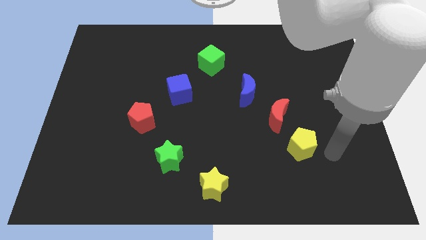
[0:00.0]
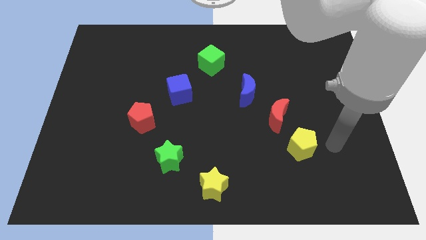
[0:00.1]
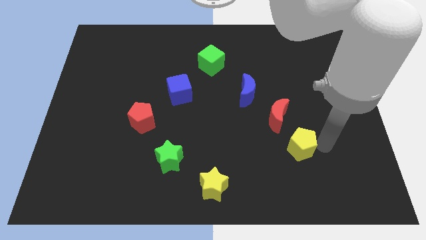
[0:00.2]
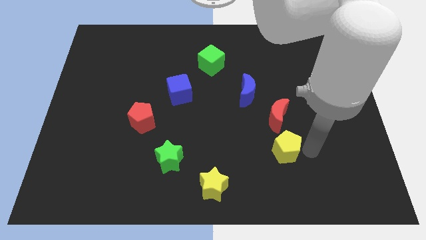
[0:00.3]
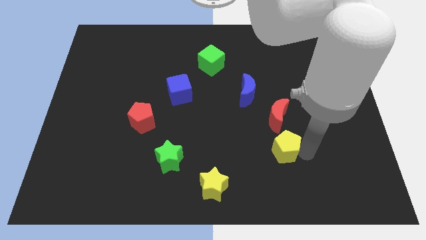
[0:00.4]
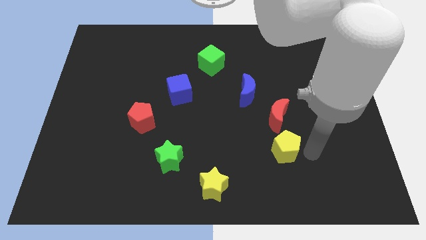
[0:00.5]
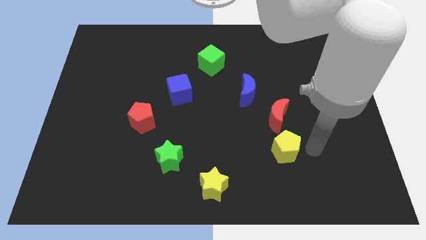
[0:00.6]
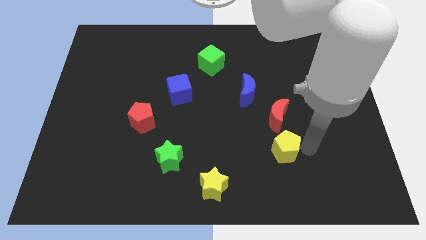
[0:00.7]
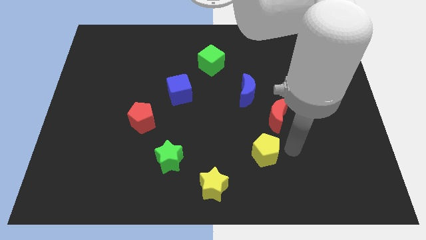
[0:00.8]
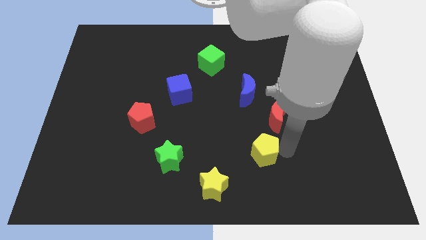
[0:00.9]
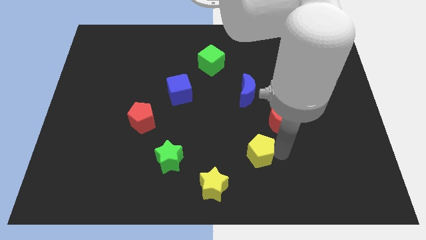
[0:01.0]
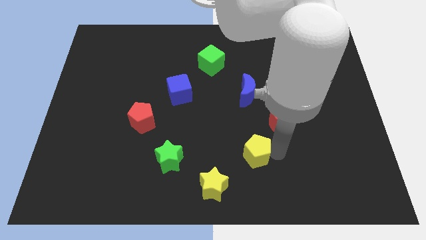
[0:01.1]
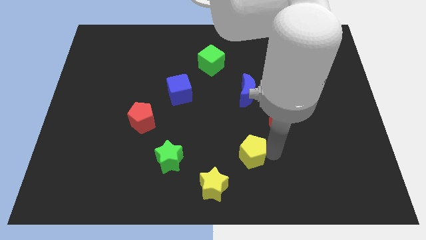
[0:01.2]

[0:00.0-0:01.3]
push the yellow pentagon slightly to the left

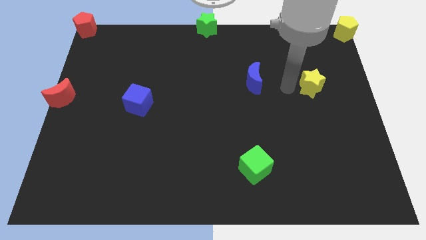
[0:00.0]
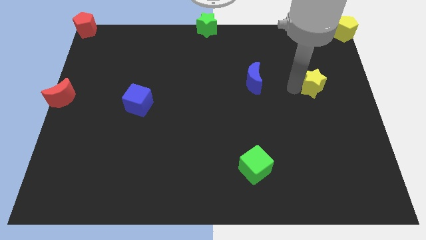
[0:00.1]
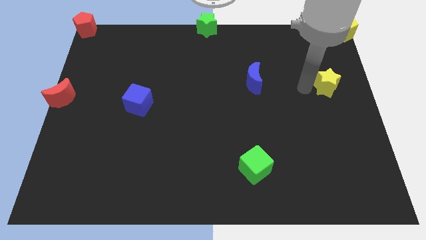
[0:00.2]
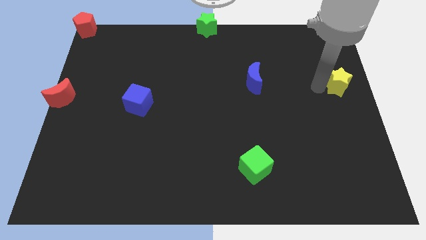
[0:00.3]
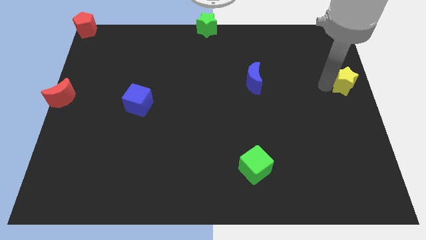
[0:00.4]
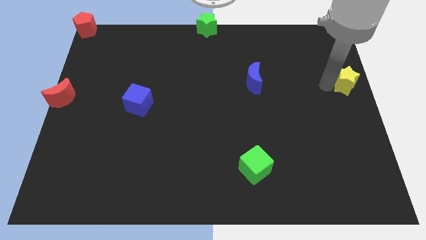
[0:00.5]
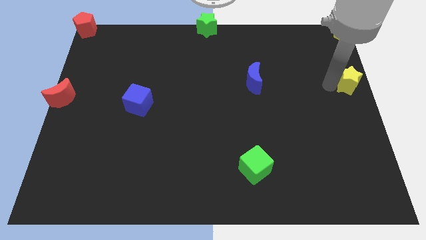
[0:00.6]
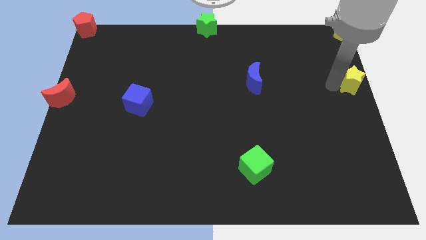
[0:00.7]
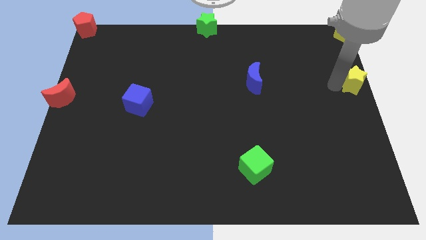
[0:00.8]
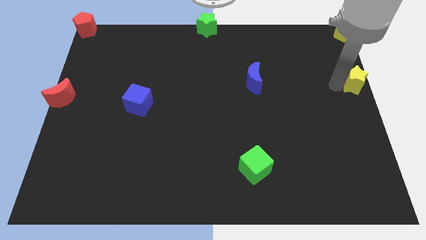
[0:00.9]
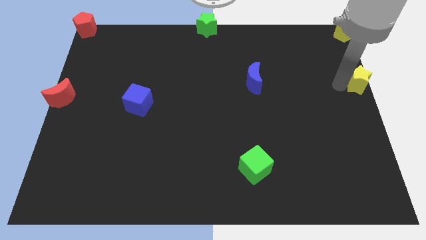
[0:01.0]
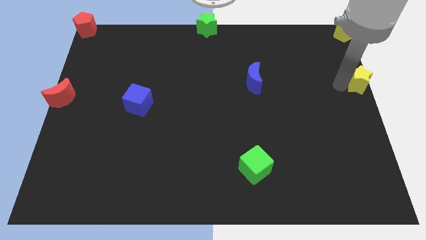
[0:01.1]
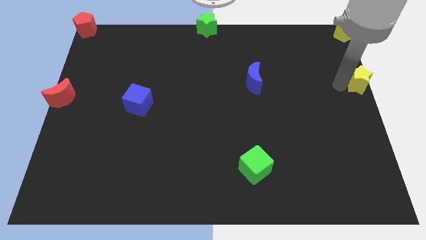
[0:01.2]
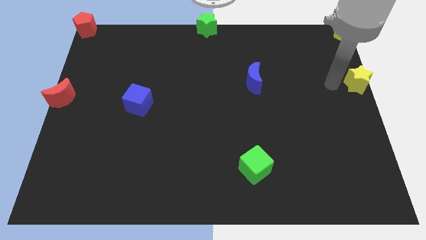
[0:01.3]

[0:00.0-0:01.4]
move the yellow star right center of the board

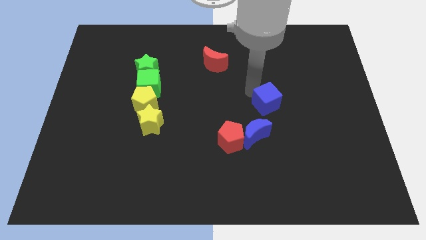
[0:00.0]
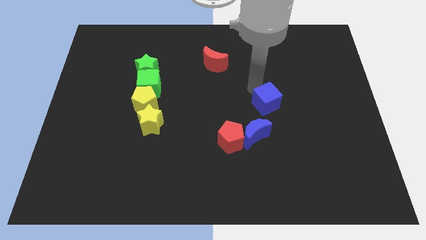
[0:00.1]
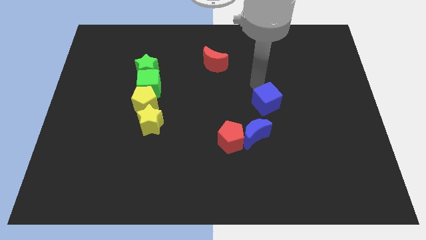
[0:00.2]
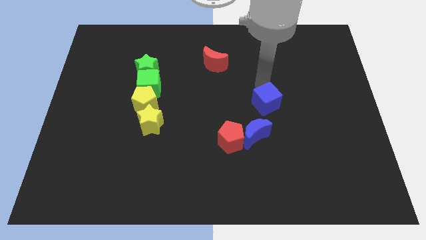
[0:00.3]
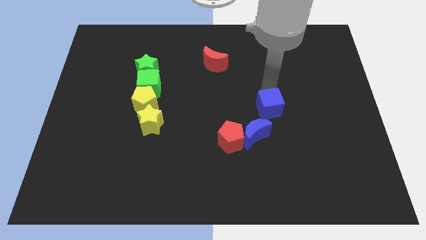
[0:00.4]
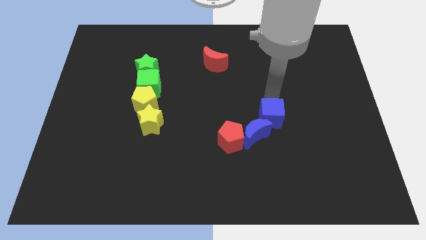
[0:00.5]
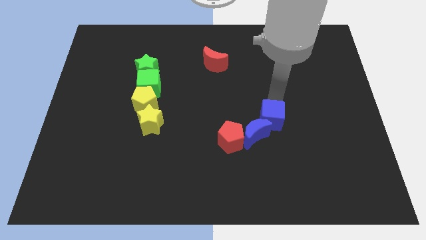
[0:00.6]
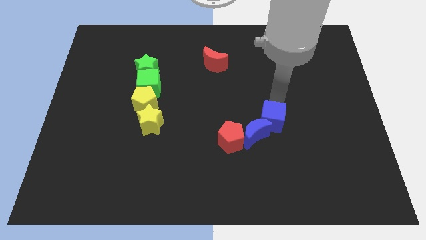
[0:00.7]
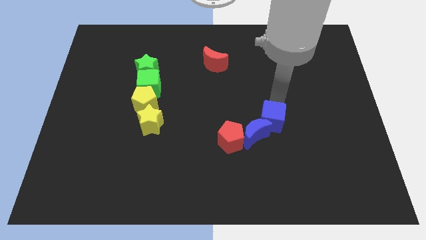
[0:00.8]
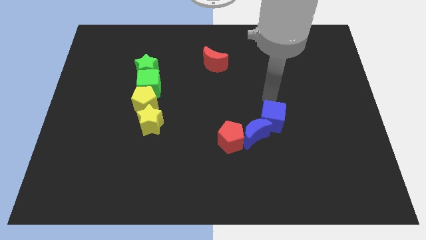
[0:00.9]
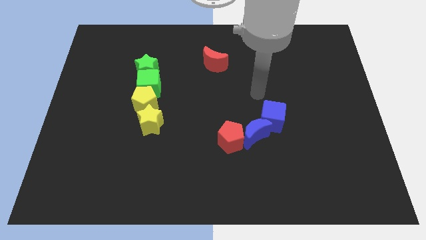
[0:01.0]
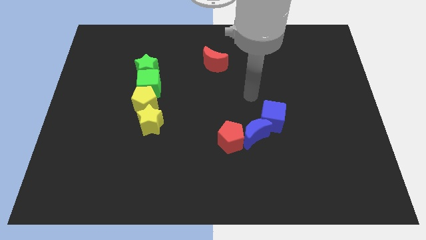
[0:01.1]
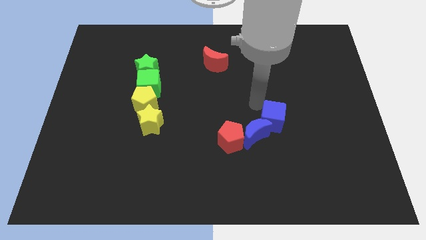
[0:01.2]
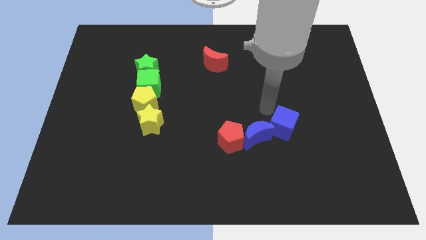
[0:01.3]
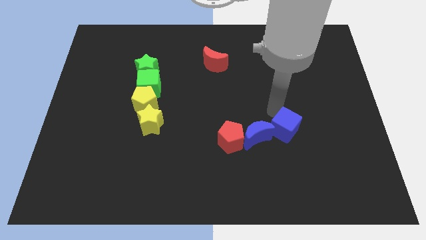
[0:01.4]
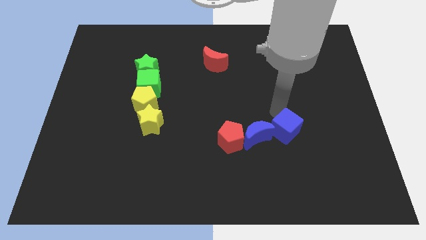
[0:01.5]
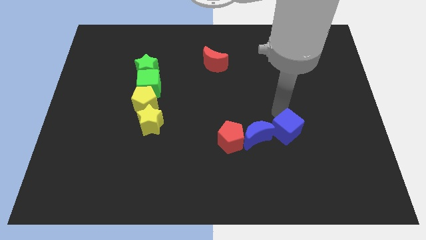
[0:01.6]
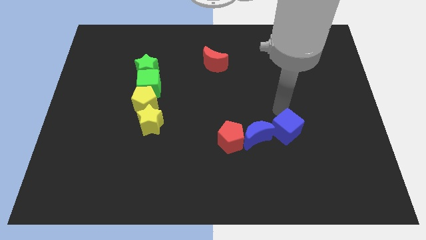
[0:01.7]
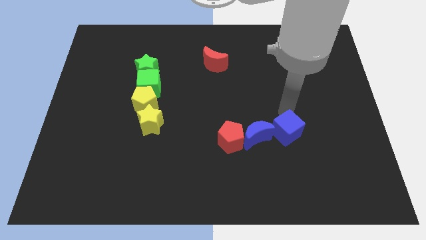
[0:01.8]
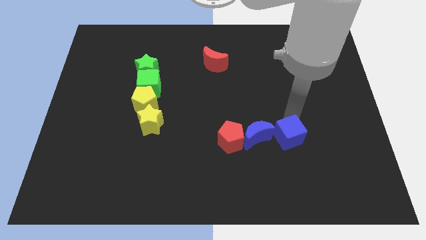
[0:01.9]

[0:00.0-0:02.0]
push the blue cube to the right of the blue crescent

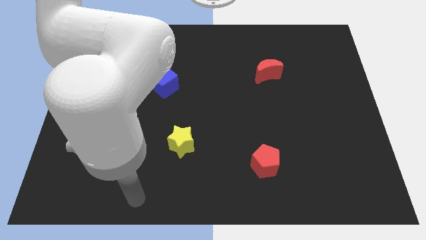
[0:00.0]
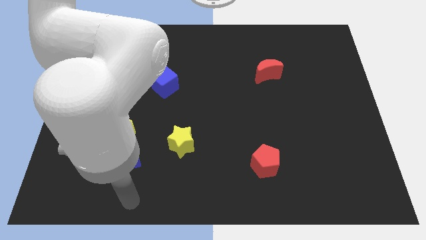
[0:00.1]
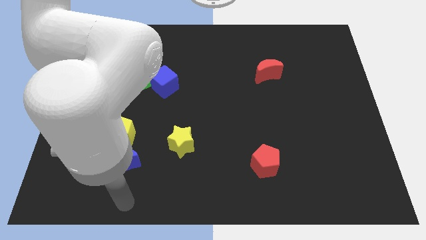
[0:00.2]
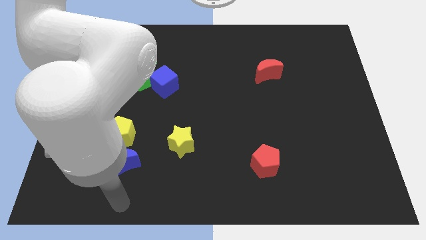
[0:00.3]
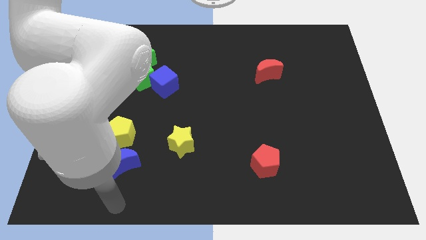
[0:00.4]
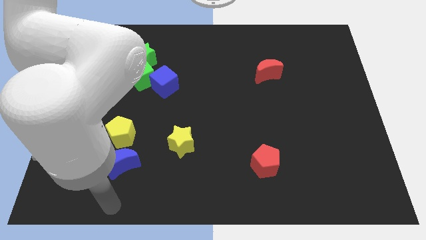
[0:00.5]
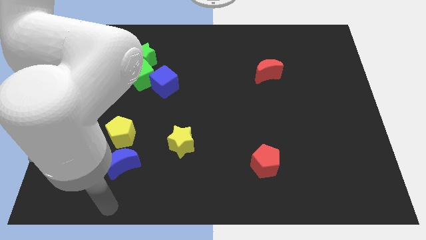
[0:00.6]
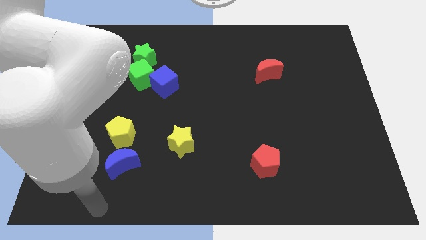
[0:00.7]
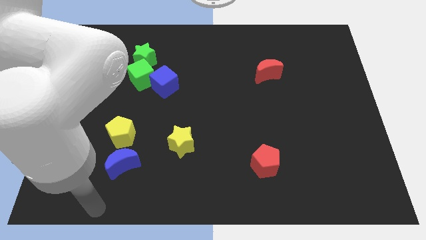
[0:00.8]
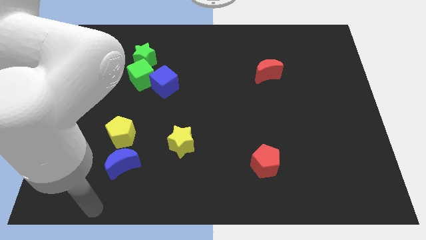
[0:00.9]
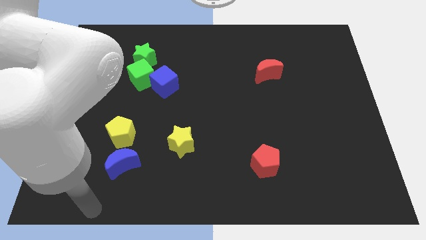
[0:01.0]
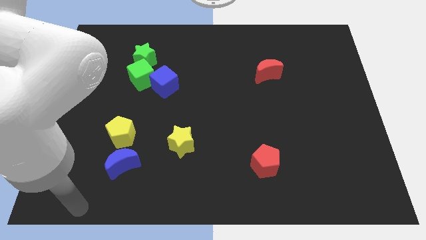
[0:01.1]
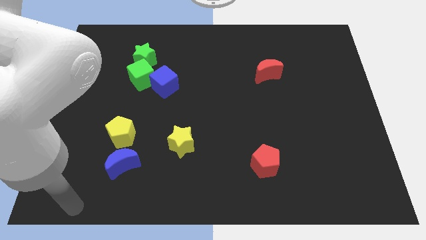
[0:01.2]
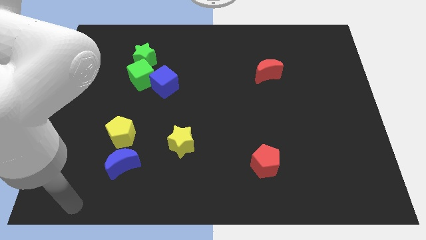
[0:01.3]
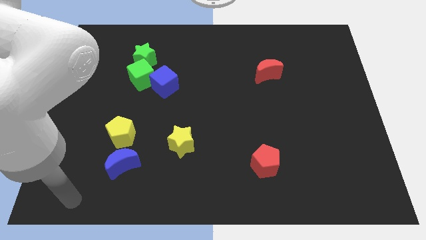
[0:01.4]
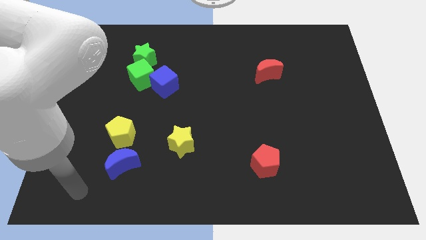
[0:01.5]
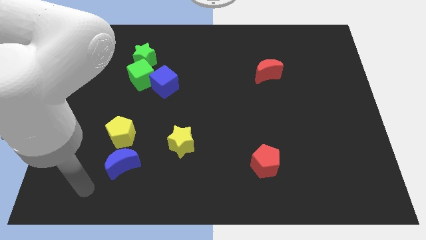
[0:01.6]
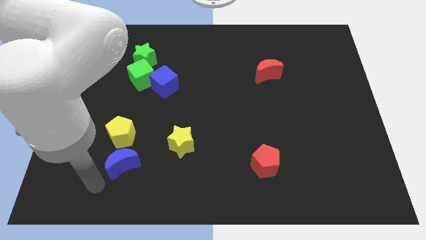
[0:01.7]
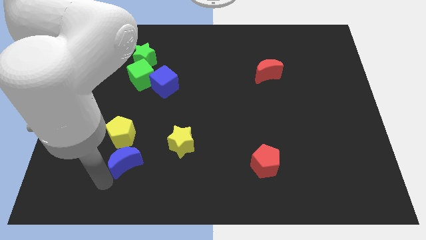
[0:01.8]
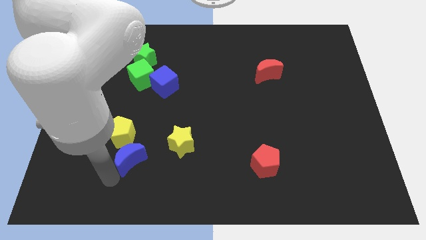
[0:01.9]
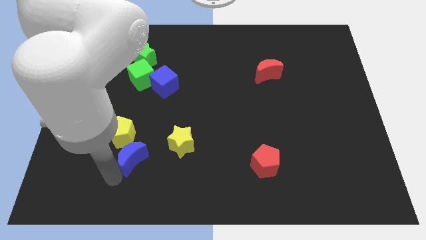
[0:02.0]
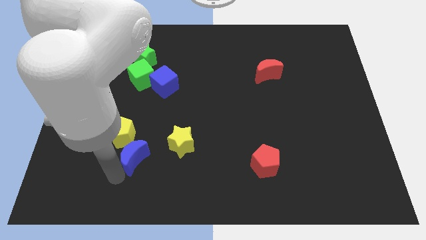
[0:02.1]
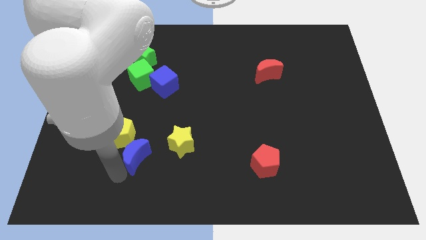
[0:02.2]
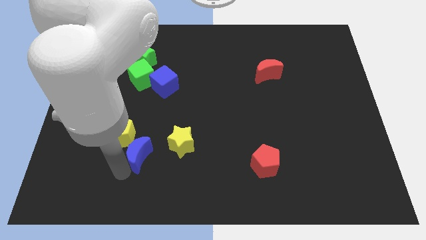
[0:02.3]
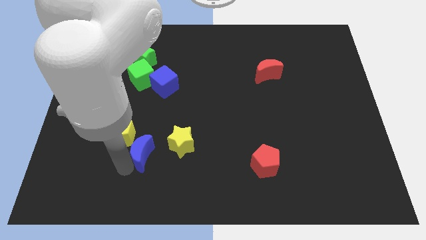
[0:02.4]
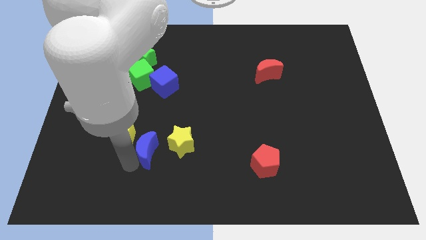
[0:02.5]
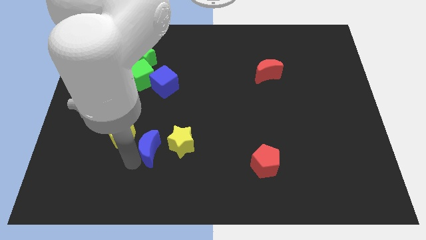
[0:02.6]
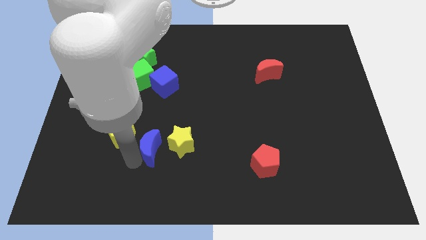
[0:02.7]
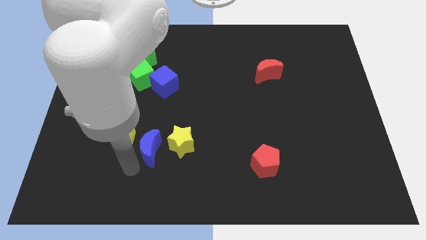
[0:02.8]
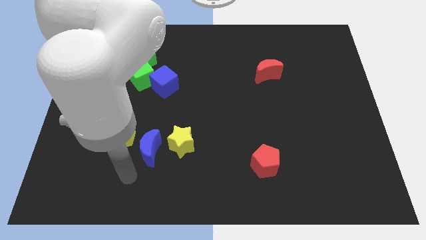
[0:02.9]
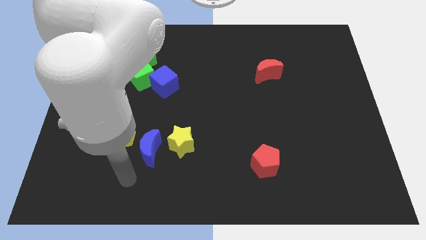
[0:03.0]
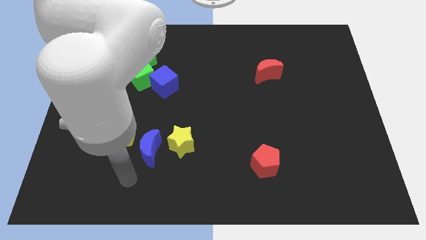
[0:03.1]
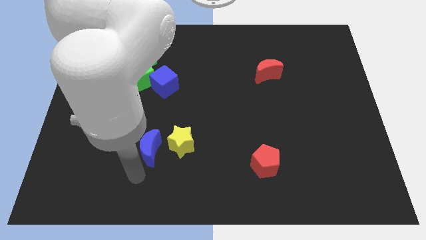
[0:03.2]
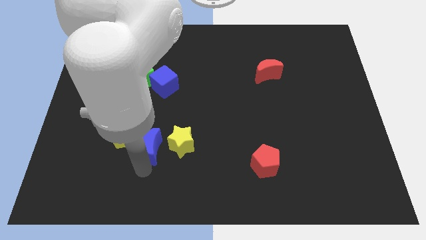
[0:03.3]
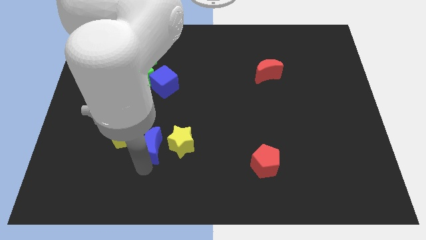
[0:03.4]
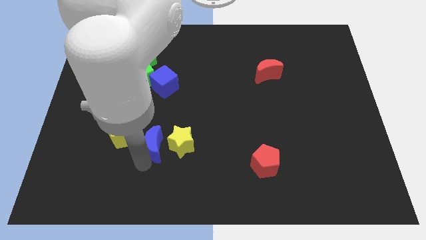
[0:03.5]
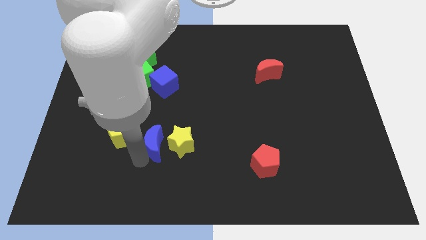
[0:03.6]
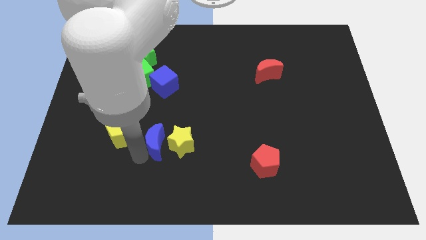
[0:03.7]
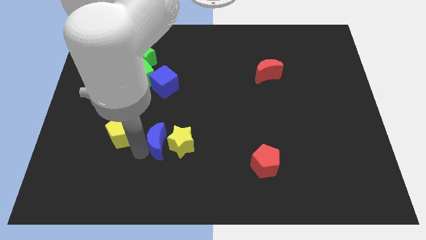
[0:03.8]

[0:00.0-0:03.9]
move the blue crescent in between the yellow blocks

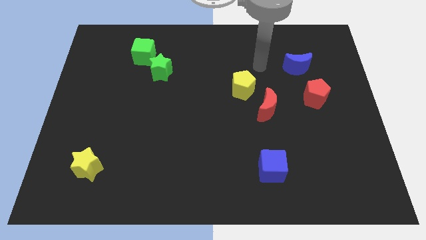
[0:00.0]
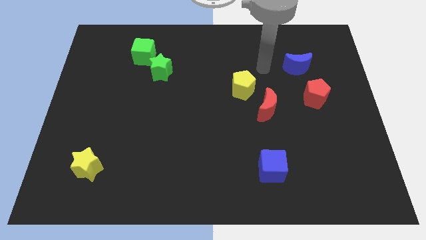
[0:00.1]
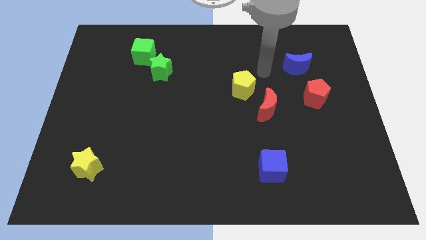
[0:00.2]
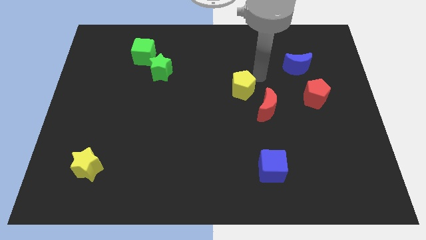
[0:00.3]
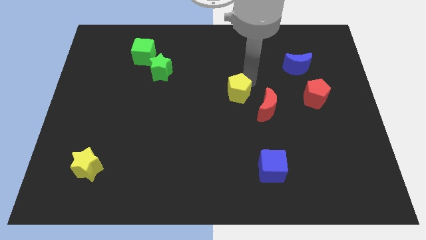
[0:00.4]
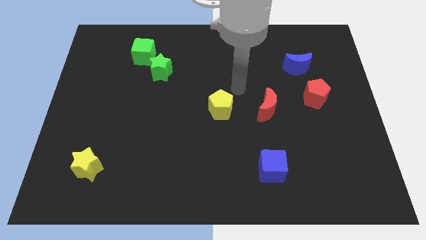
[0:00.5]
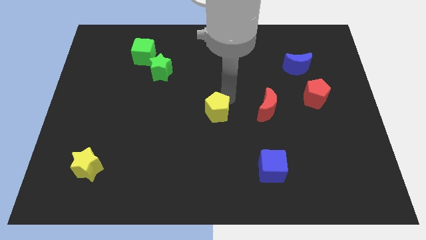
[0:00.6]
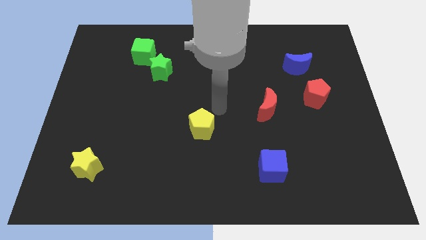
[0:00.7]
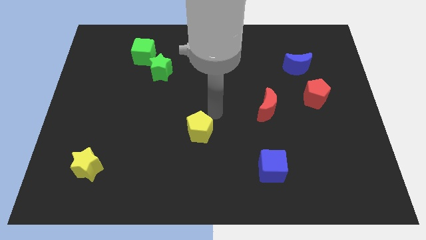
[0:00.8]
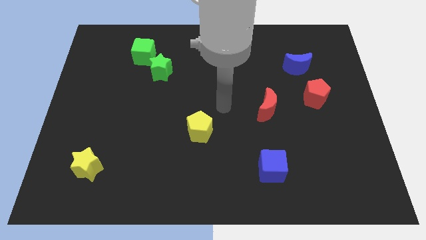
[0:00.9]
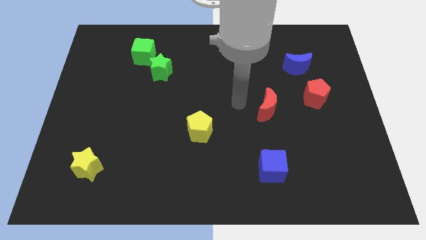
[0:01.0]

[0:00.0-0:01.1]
move the yellow pentagon to the centre of the board
